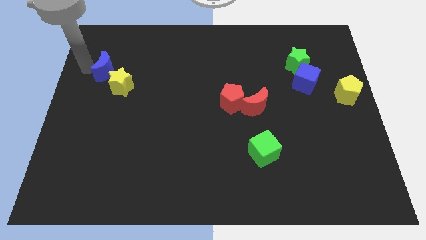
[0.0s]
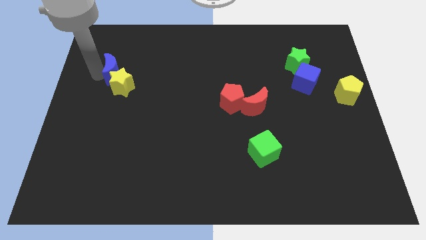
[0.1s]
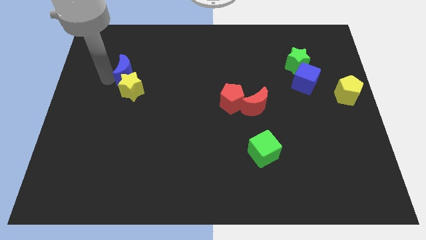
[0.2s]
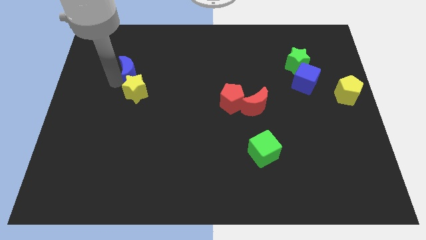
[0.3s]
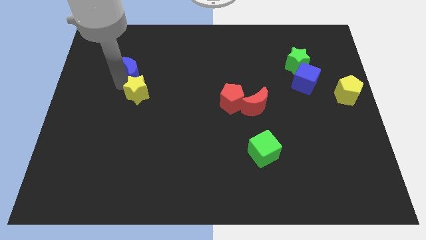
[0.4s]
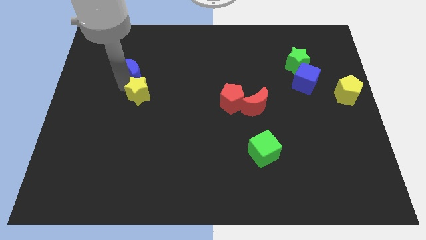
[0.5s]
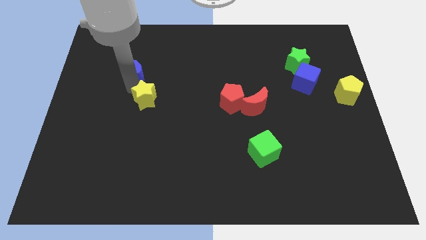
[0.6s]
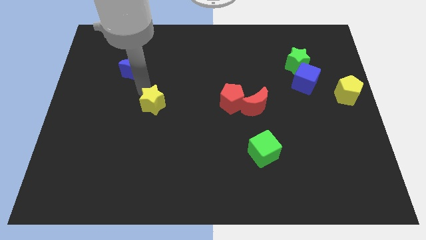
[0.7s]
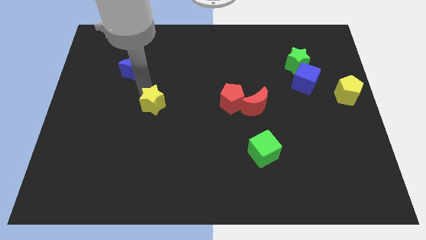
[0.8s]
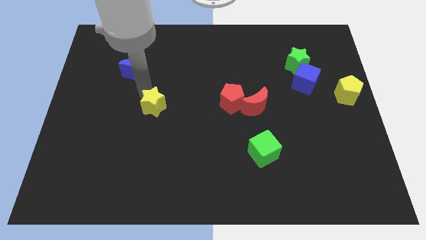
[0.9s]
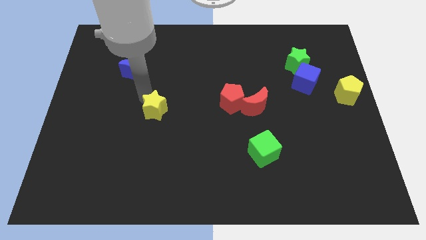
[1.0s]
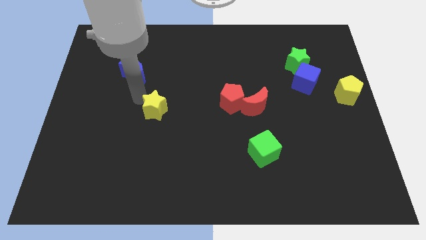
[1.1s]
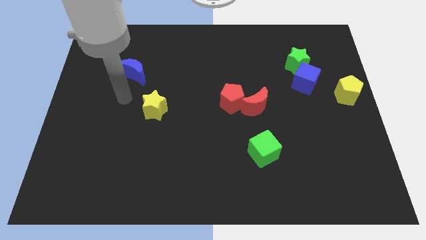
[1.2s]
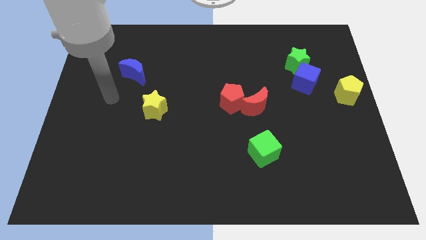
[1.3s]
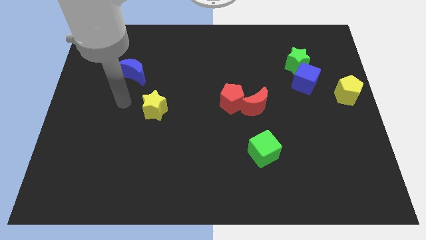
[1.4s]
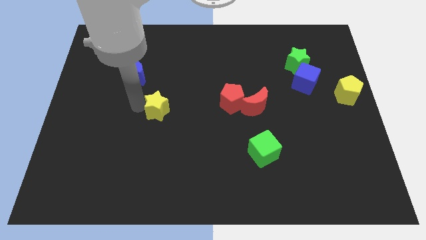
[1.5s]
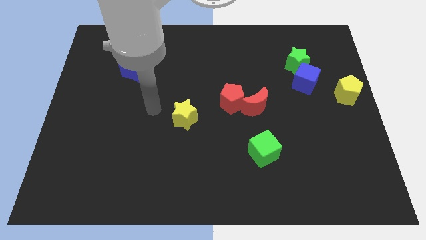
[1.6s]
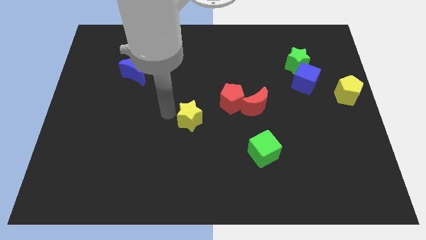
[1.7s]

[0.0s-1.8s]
separate the yellow star from the blue moon

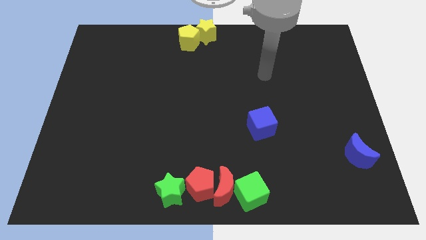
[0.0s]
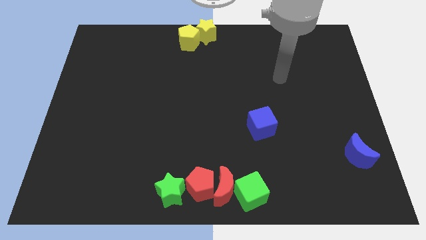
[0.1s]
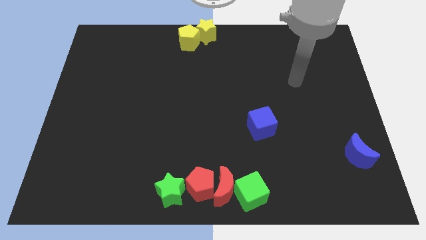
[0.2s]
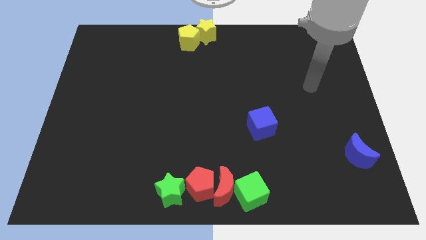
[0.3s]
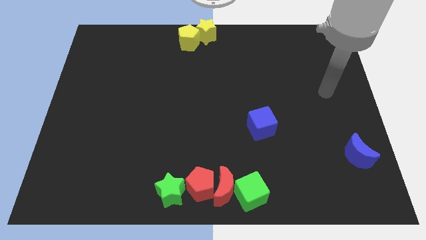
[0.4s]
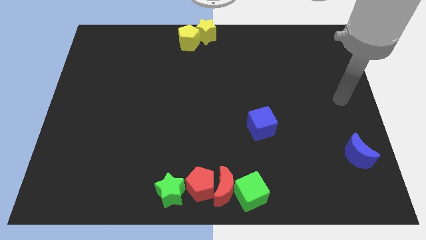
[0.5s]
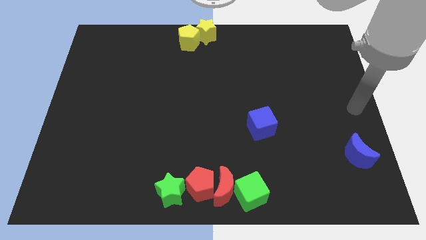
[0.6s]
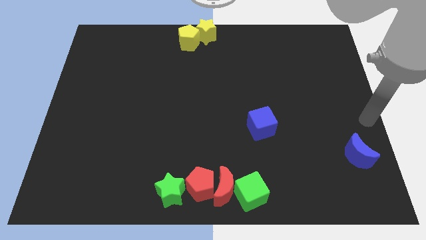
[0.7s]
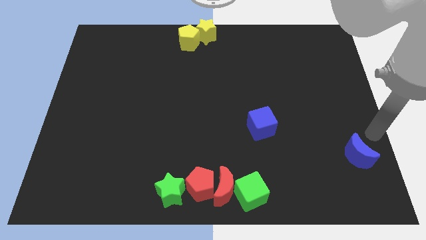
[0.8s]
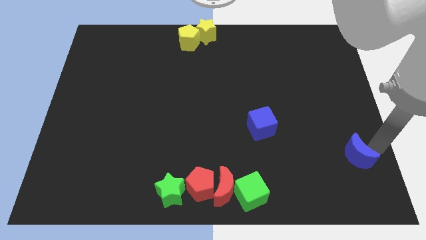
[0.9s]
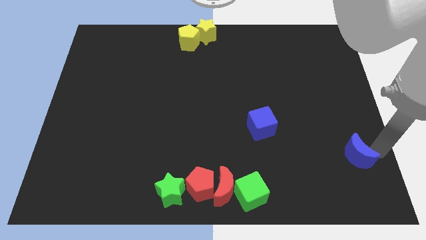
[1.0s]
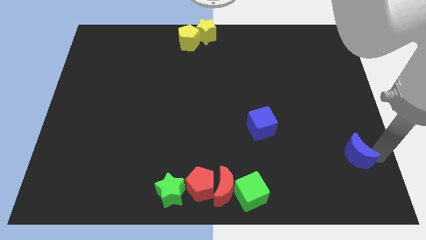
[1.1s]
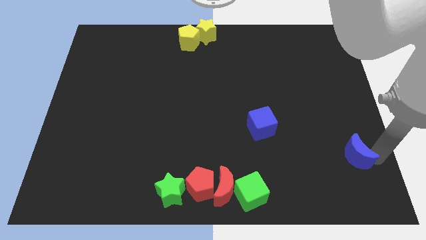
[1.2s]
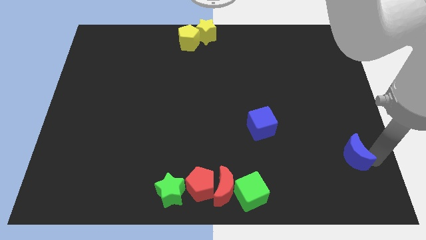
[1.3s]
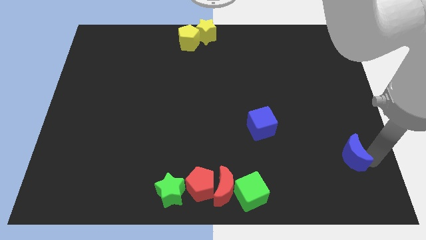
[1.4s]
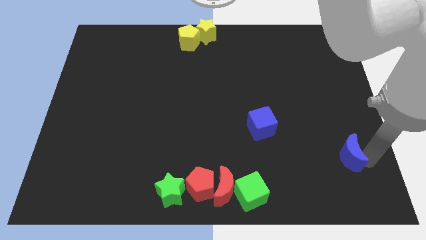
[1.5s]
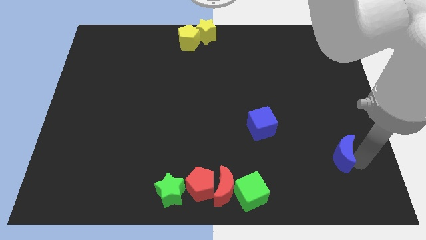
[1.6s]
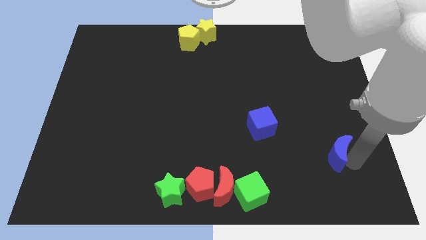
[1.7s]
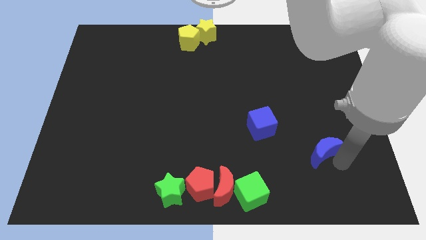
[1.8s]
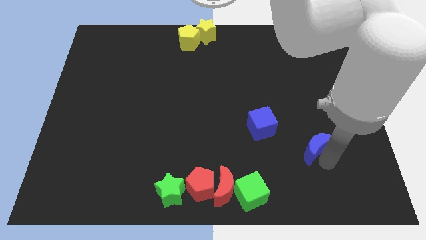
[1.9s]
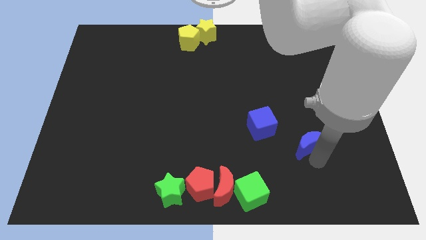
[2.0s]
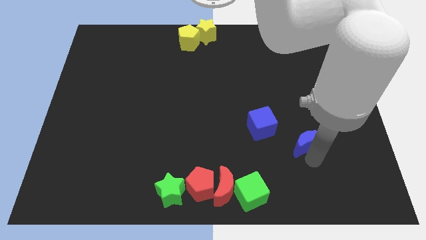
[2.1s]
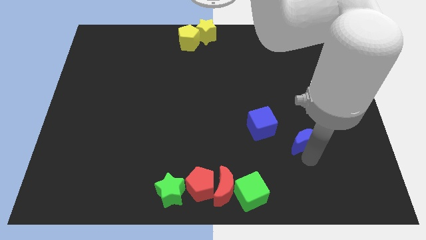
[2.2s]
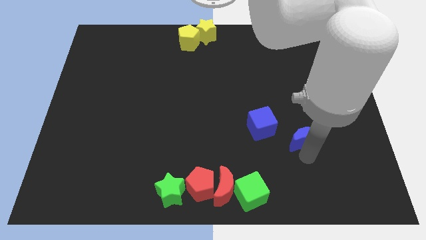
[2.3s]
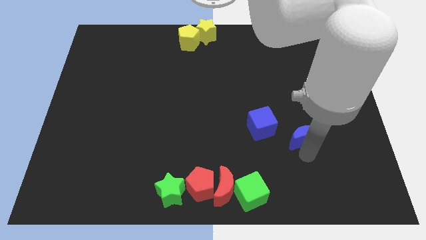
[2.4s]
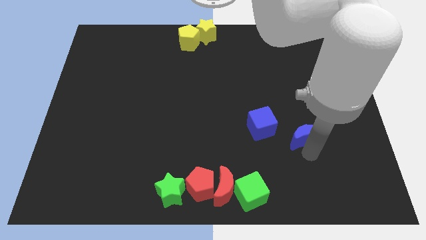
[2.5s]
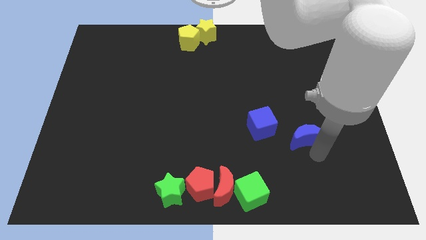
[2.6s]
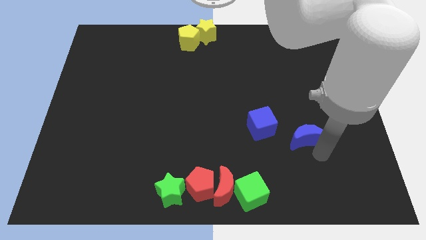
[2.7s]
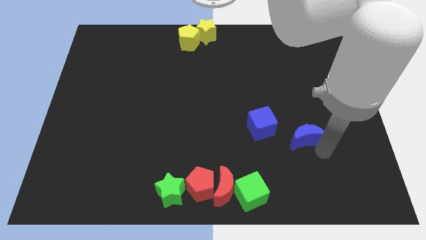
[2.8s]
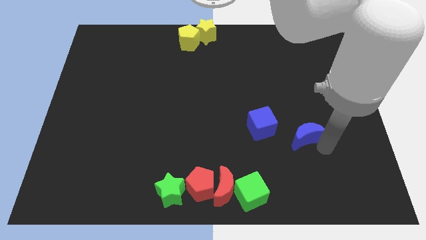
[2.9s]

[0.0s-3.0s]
move the blue crescent towards the blue cube

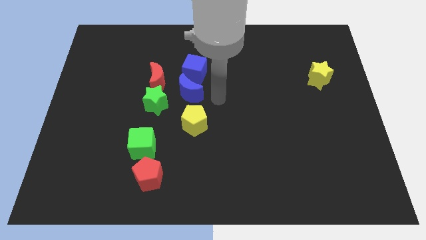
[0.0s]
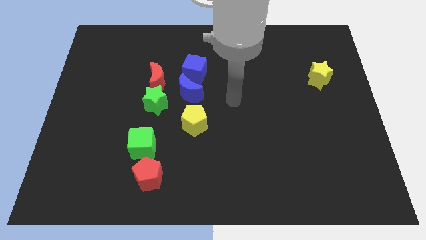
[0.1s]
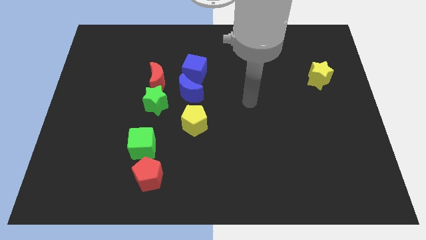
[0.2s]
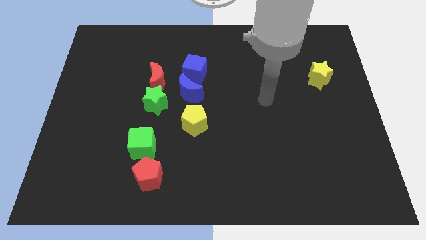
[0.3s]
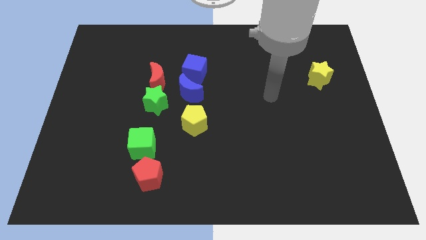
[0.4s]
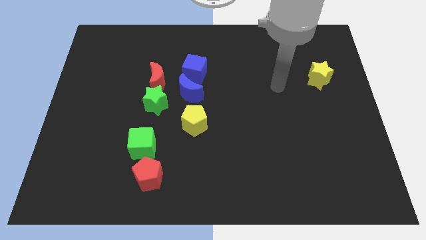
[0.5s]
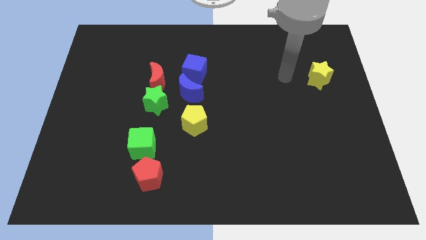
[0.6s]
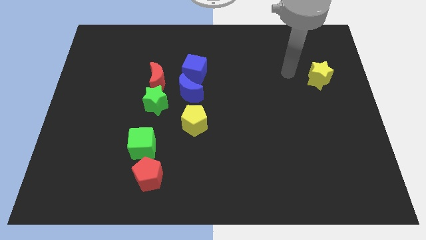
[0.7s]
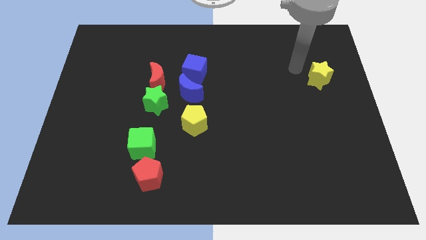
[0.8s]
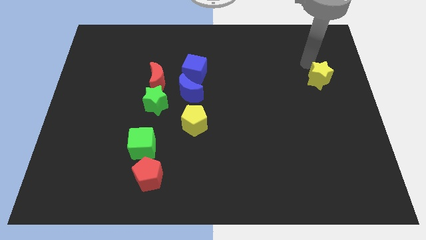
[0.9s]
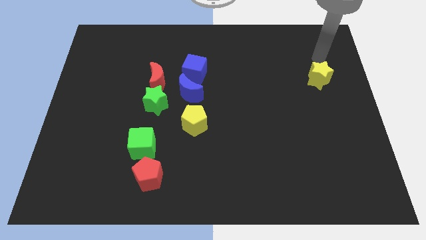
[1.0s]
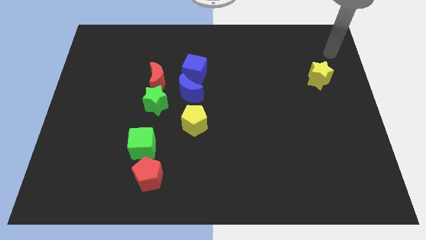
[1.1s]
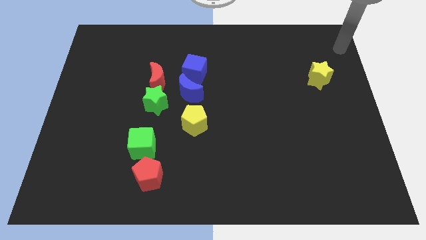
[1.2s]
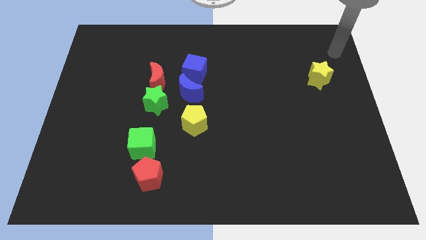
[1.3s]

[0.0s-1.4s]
move the arm away from the blue moon

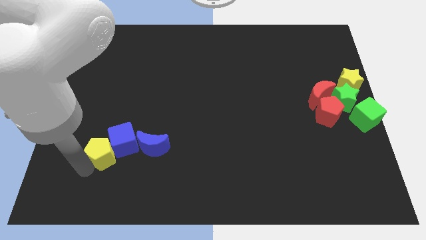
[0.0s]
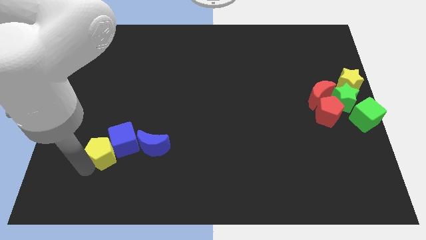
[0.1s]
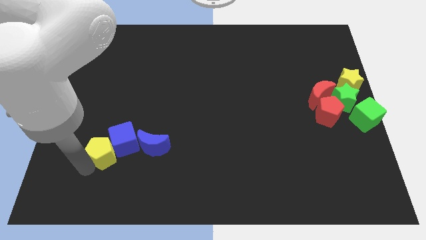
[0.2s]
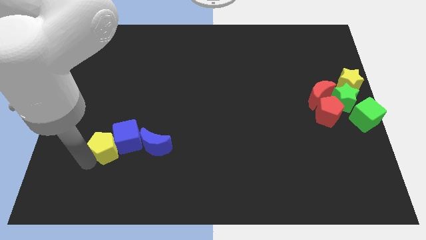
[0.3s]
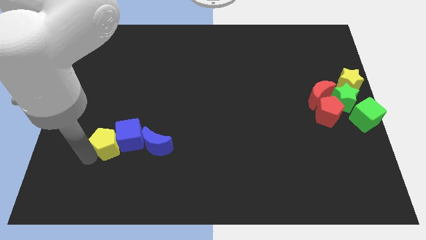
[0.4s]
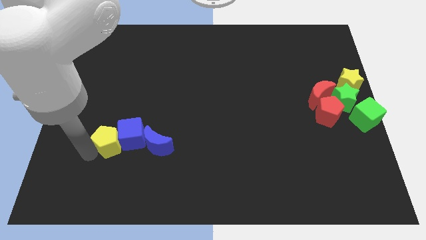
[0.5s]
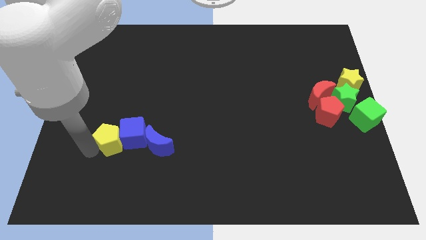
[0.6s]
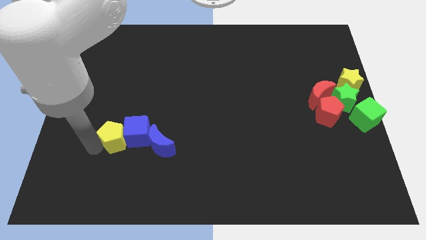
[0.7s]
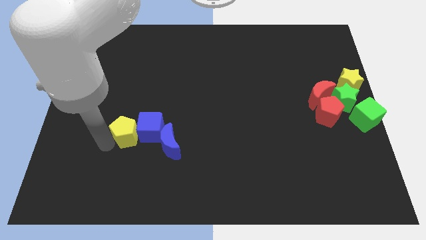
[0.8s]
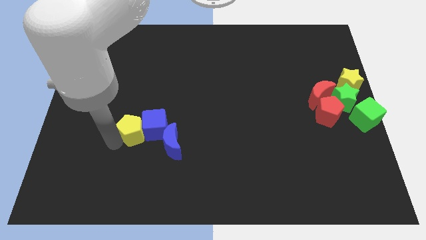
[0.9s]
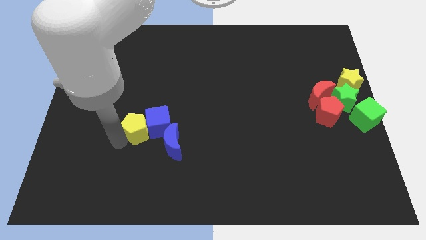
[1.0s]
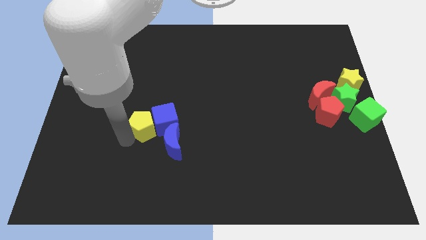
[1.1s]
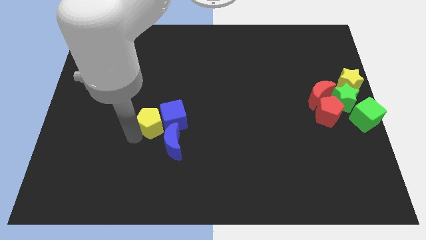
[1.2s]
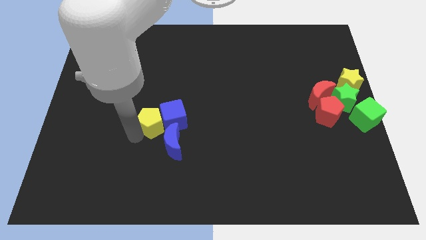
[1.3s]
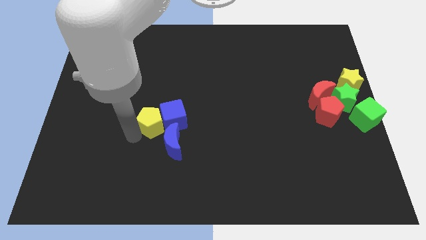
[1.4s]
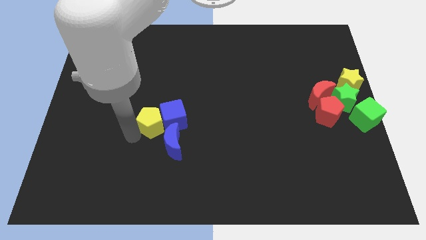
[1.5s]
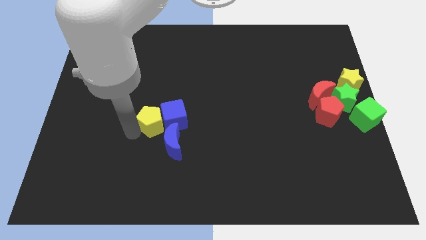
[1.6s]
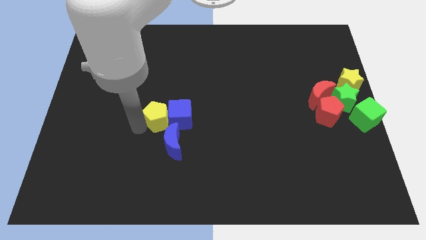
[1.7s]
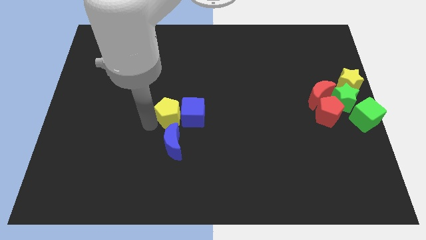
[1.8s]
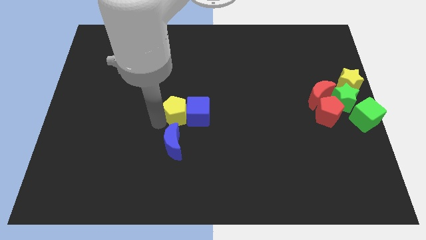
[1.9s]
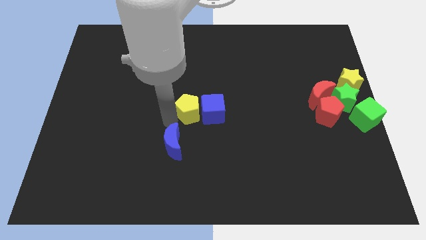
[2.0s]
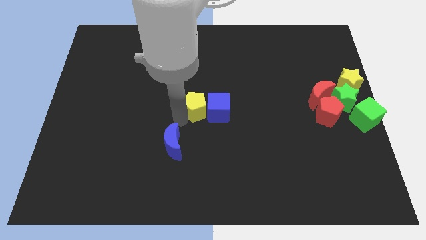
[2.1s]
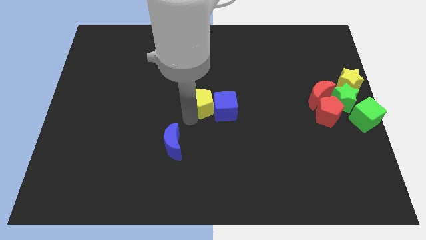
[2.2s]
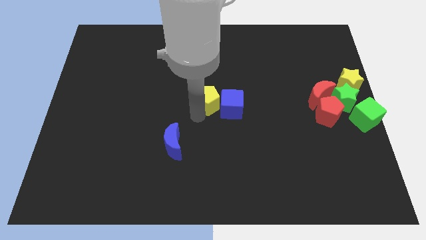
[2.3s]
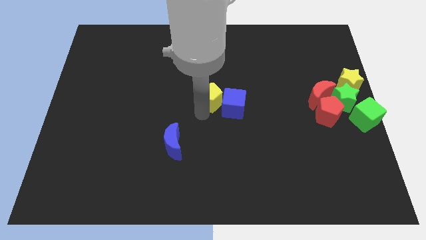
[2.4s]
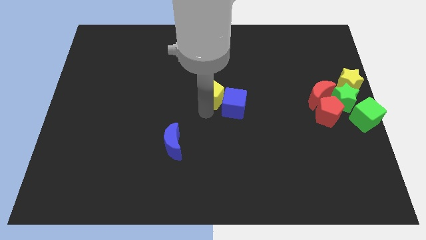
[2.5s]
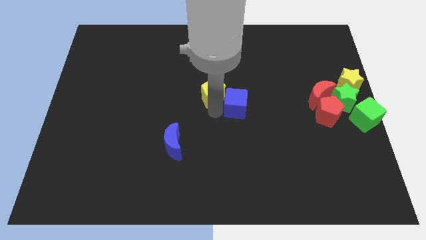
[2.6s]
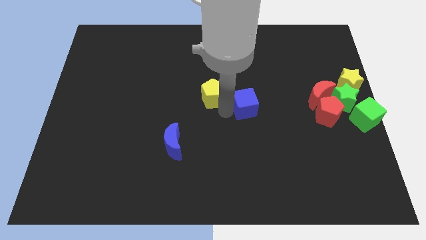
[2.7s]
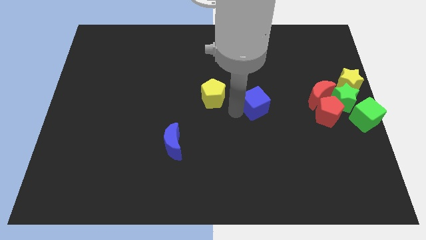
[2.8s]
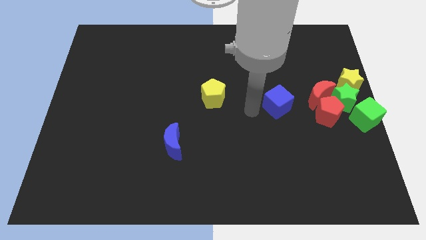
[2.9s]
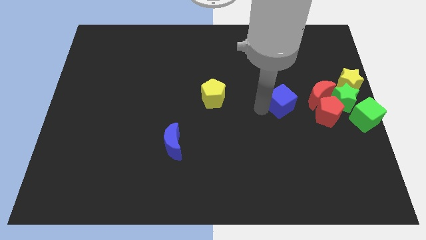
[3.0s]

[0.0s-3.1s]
separate the yellow pentagon and blue cube
